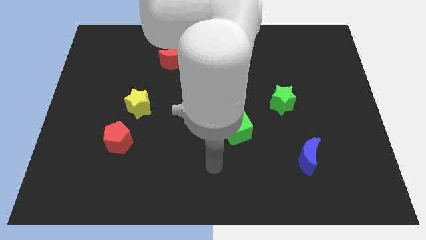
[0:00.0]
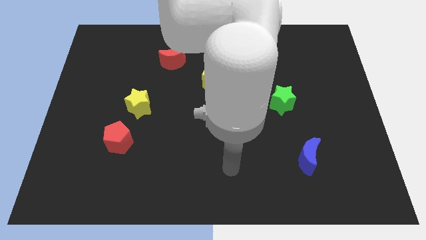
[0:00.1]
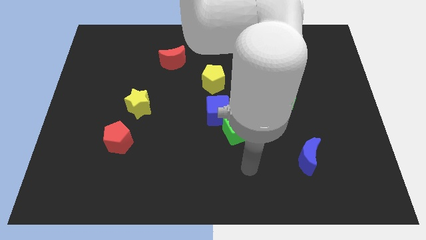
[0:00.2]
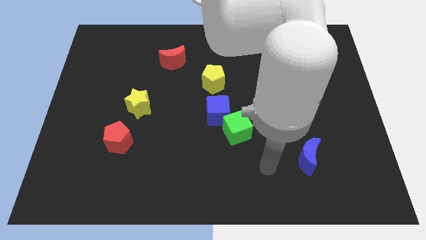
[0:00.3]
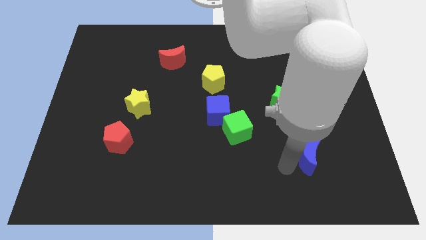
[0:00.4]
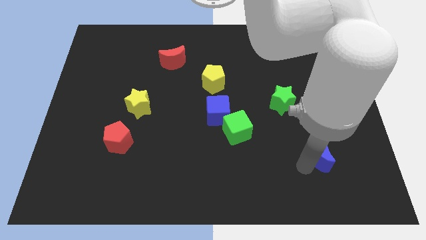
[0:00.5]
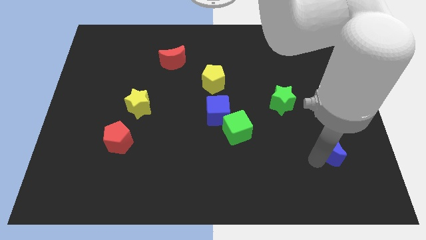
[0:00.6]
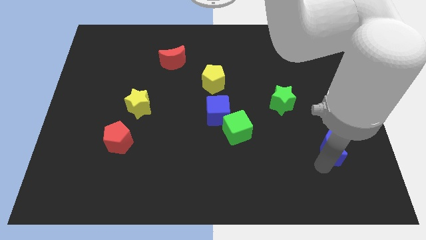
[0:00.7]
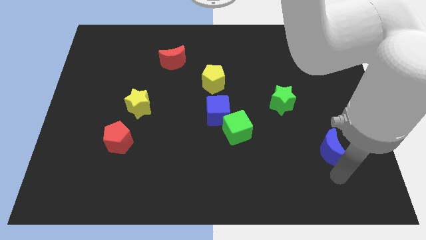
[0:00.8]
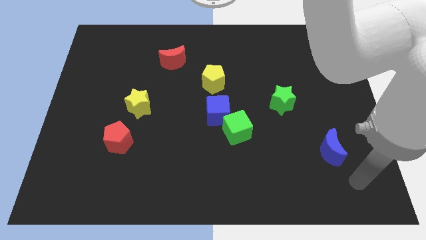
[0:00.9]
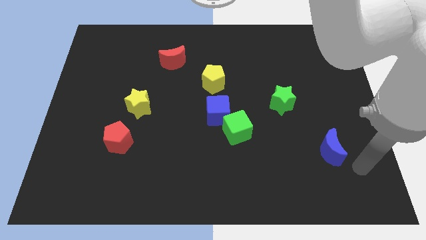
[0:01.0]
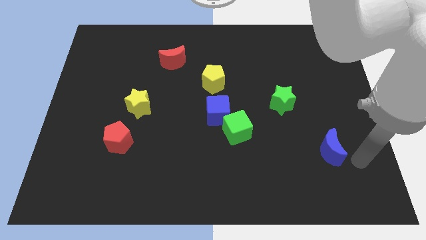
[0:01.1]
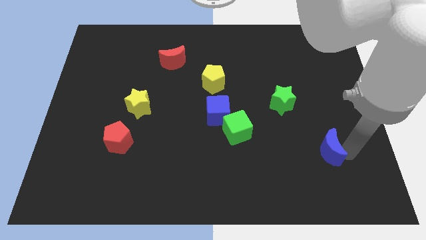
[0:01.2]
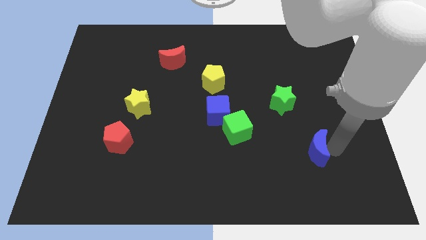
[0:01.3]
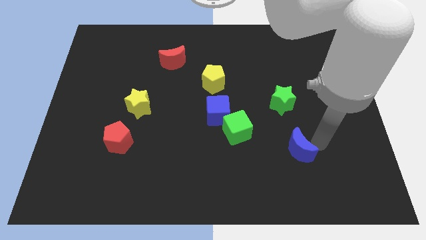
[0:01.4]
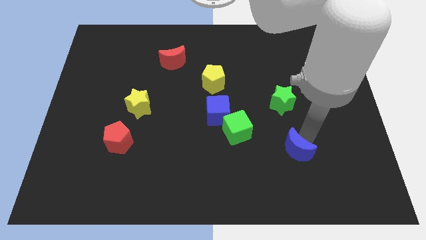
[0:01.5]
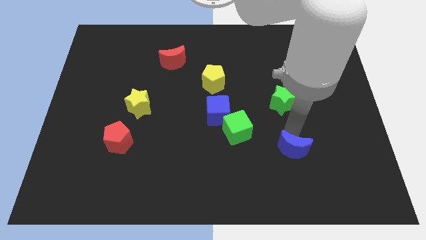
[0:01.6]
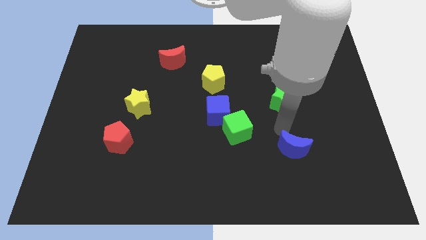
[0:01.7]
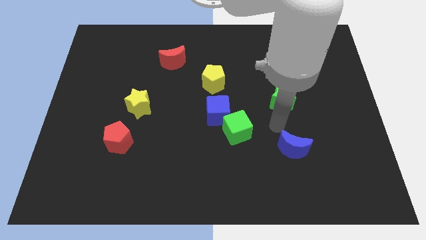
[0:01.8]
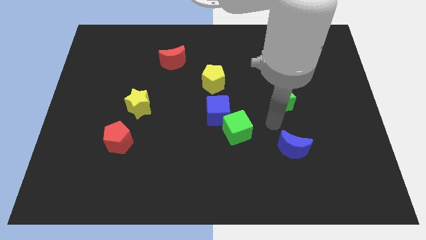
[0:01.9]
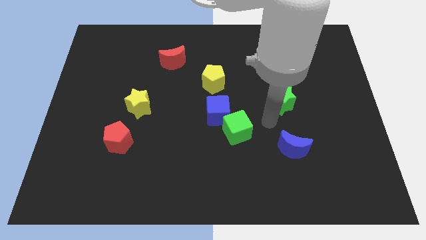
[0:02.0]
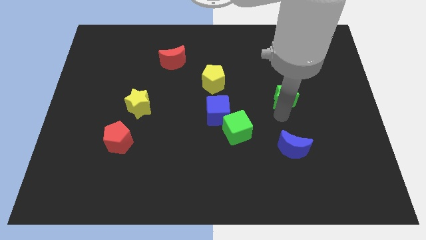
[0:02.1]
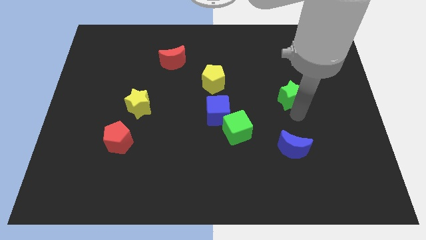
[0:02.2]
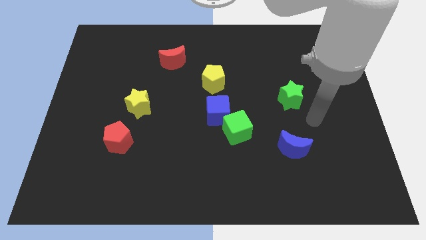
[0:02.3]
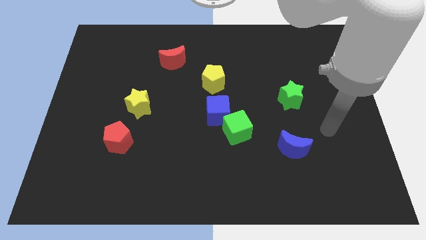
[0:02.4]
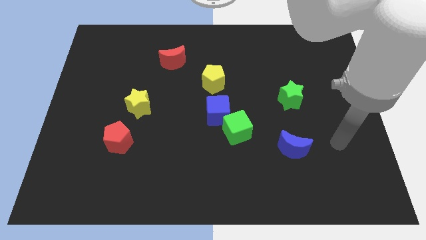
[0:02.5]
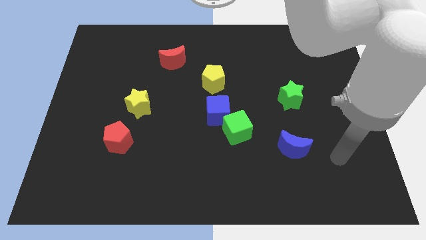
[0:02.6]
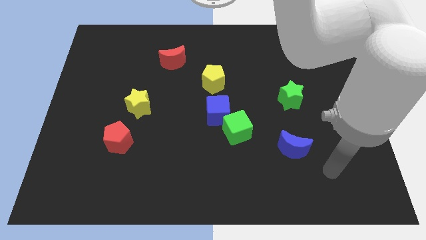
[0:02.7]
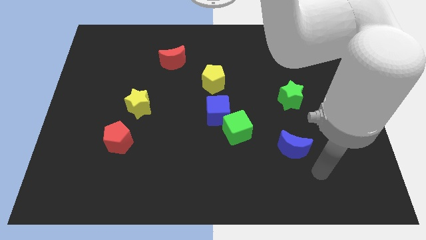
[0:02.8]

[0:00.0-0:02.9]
place blue moon vertical to green star

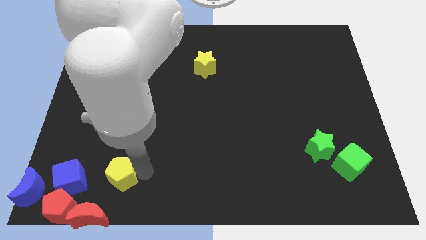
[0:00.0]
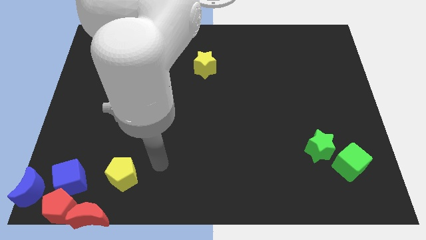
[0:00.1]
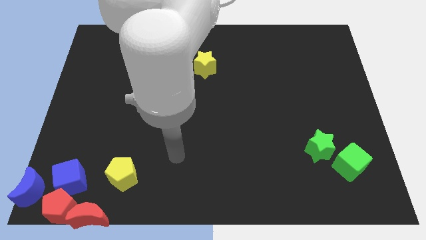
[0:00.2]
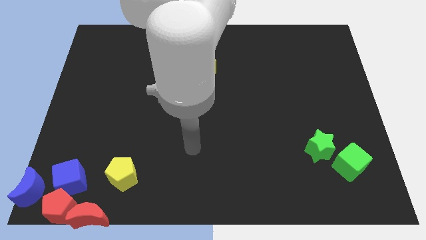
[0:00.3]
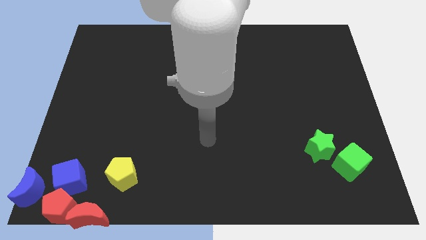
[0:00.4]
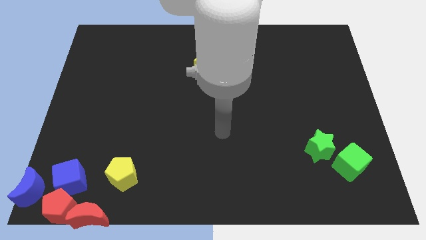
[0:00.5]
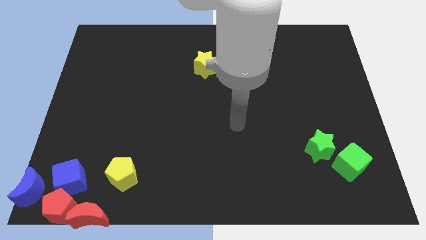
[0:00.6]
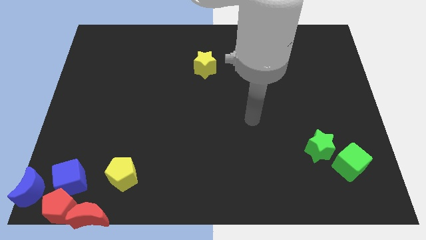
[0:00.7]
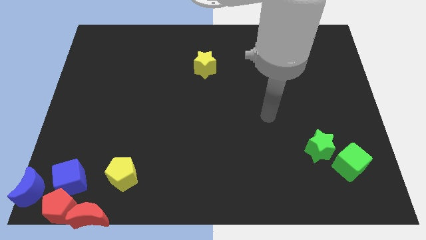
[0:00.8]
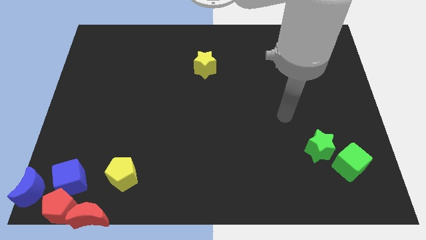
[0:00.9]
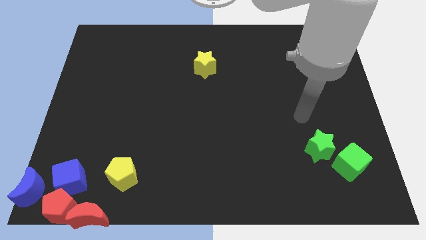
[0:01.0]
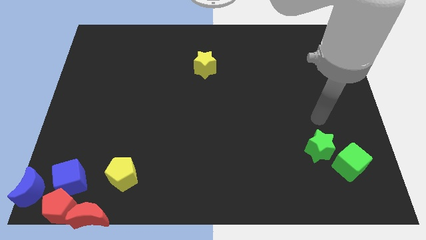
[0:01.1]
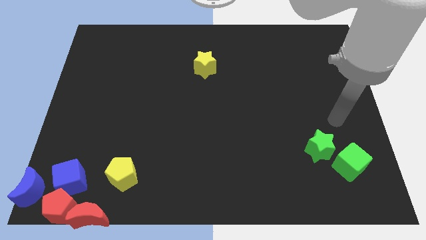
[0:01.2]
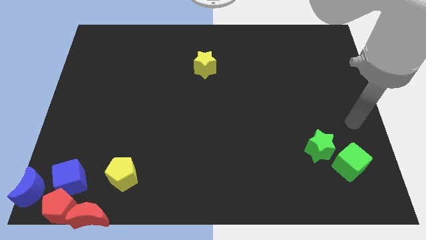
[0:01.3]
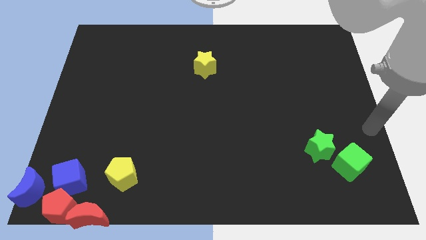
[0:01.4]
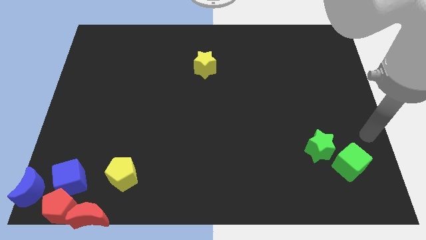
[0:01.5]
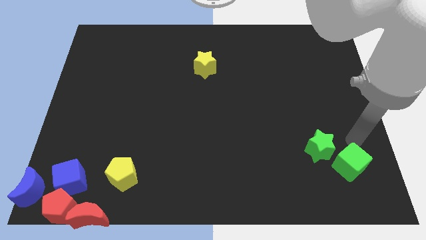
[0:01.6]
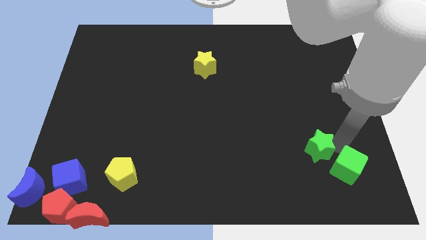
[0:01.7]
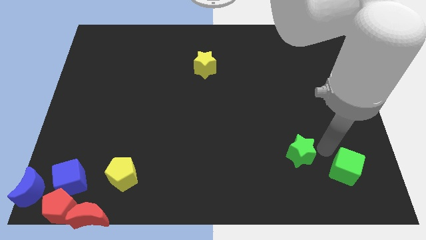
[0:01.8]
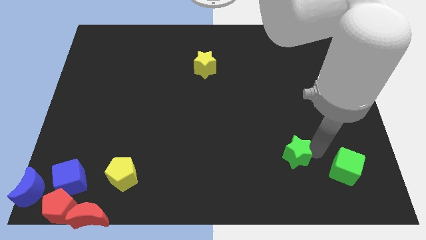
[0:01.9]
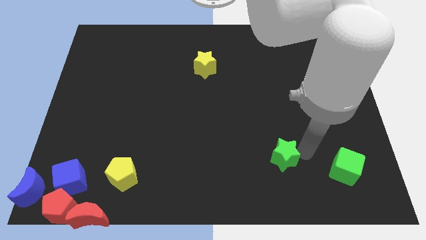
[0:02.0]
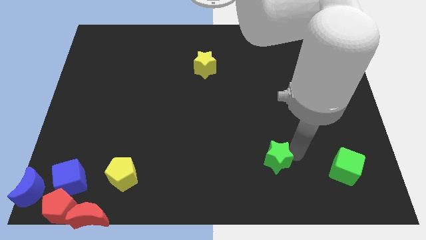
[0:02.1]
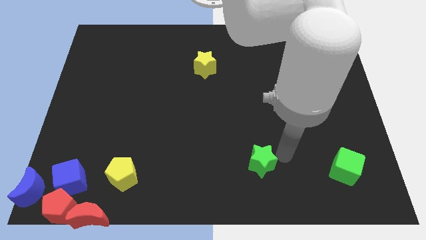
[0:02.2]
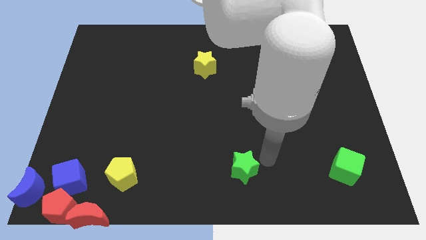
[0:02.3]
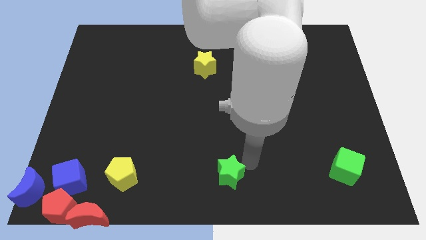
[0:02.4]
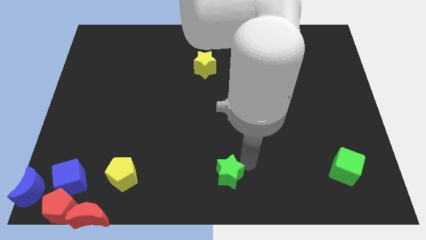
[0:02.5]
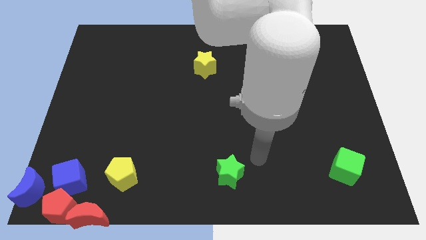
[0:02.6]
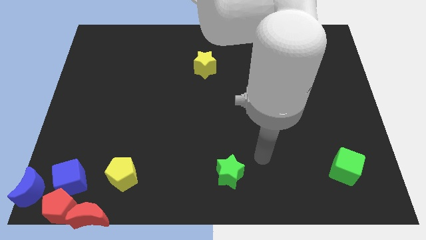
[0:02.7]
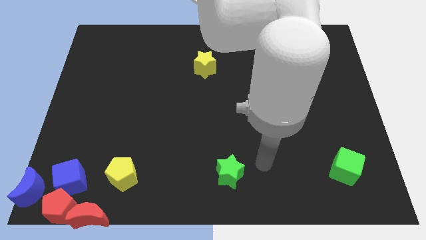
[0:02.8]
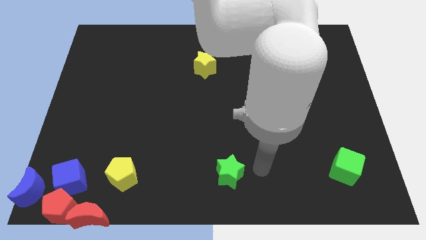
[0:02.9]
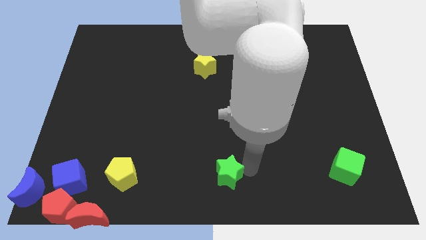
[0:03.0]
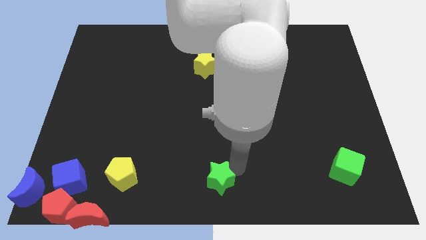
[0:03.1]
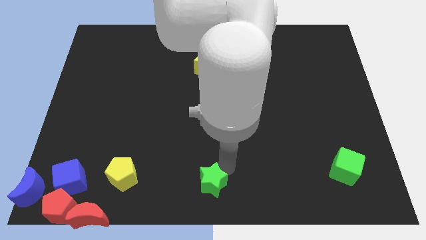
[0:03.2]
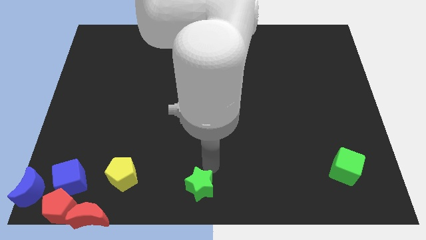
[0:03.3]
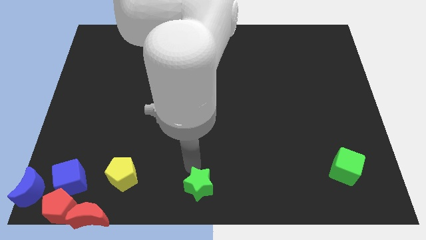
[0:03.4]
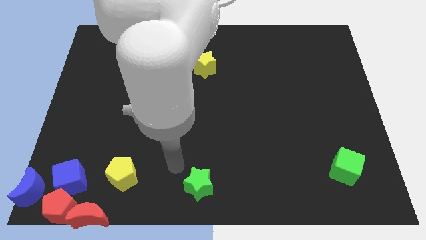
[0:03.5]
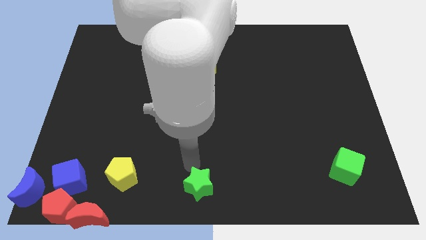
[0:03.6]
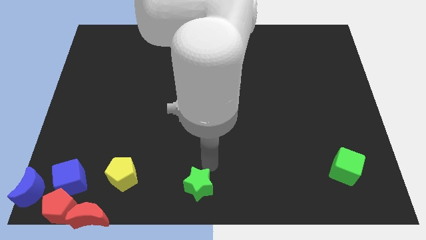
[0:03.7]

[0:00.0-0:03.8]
move the green star to the bottom center of the table

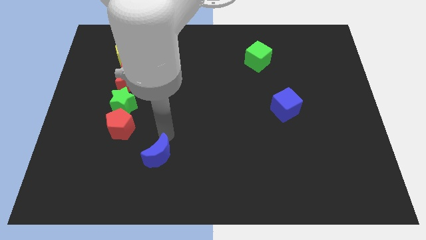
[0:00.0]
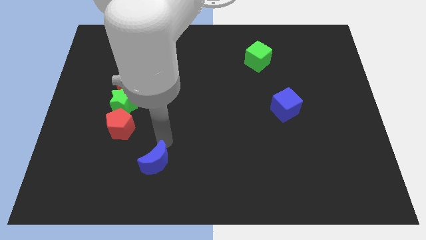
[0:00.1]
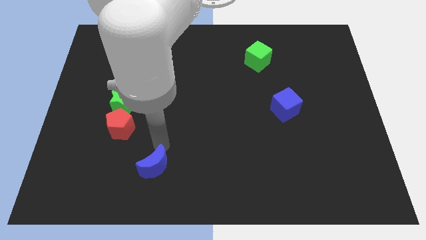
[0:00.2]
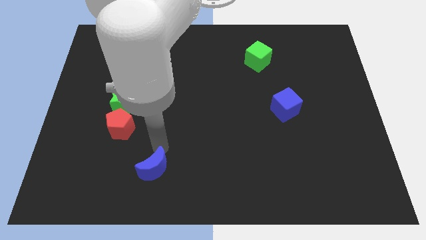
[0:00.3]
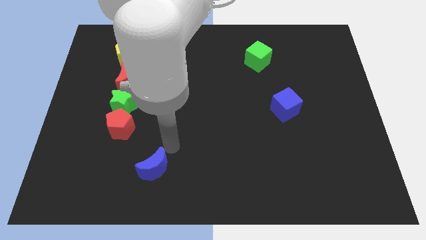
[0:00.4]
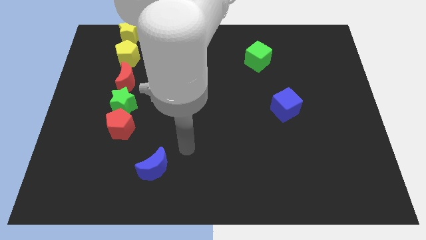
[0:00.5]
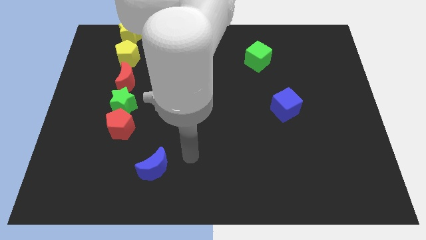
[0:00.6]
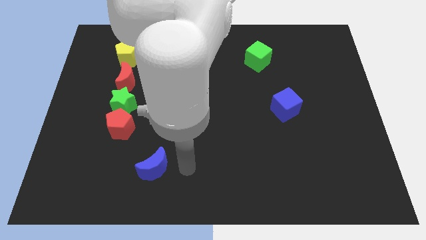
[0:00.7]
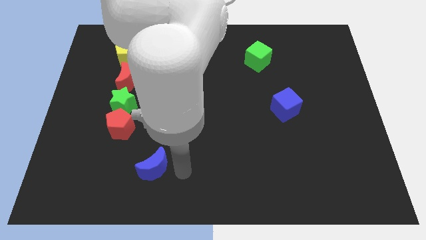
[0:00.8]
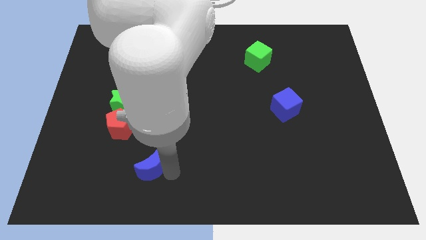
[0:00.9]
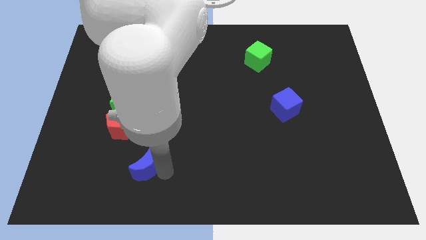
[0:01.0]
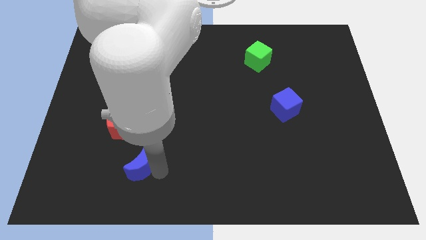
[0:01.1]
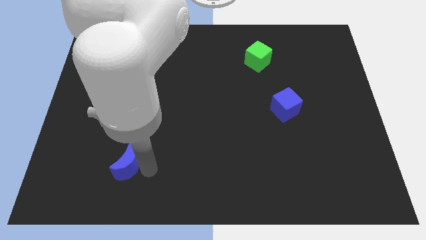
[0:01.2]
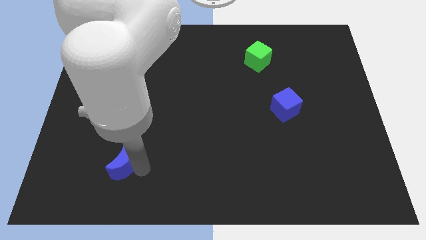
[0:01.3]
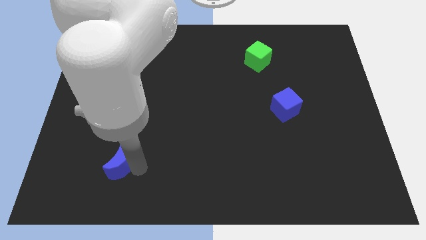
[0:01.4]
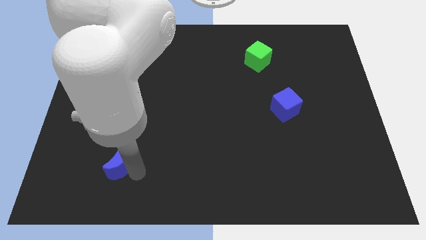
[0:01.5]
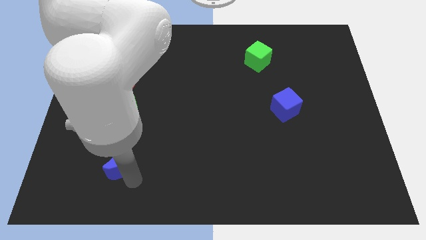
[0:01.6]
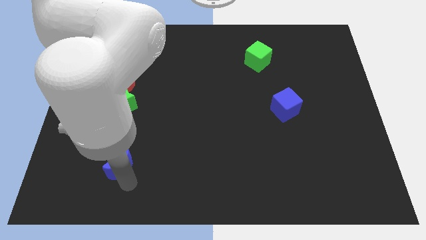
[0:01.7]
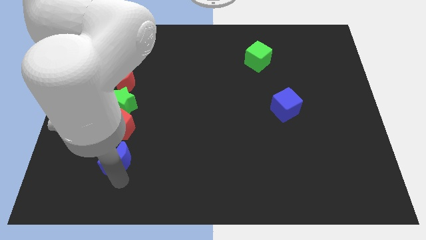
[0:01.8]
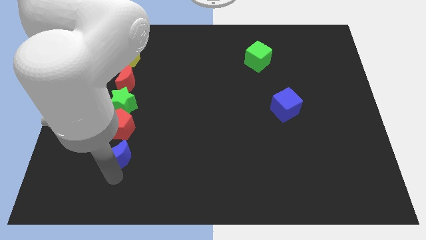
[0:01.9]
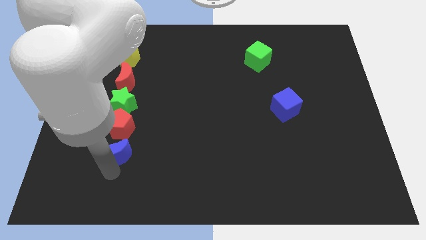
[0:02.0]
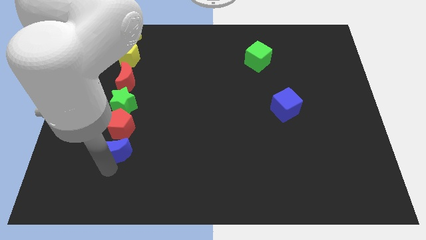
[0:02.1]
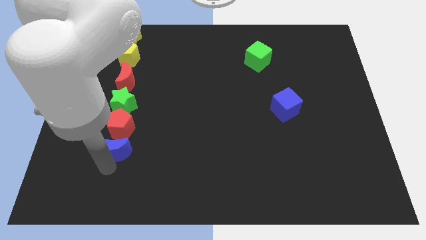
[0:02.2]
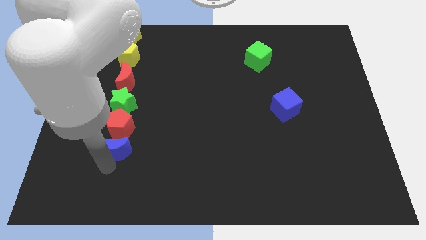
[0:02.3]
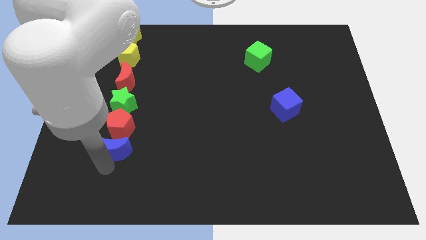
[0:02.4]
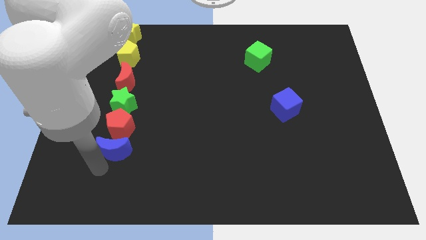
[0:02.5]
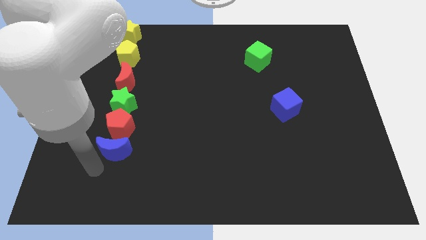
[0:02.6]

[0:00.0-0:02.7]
place the blue moon below the red pentagon to form a line
